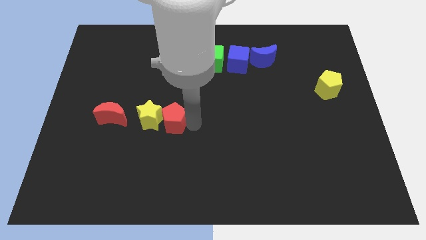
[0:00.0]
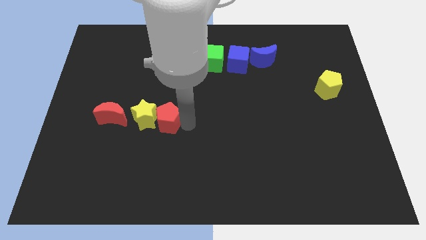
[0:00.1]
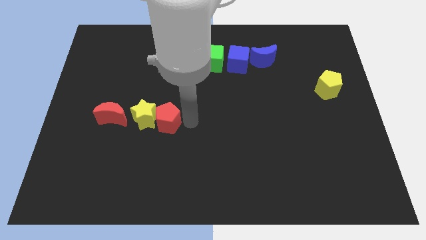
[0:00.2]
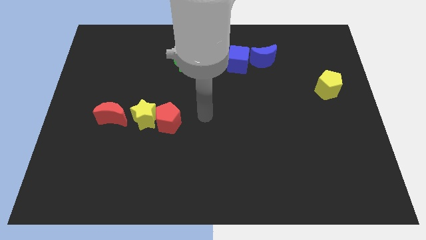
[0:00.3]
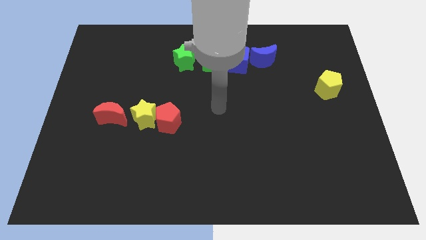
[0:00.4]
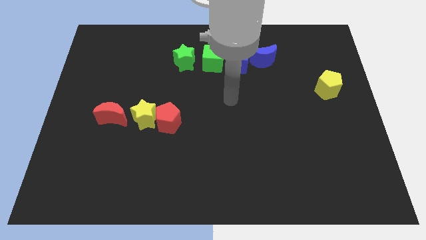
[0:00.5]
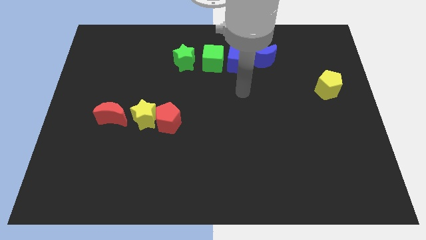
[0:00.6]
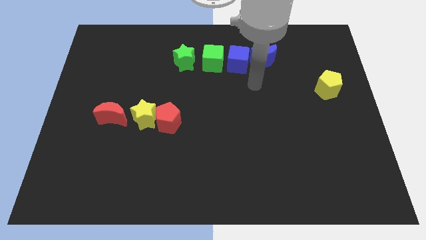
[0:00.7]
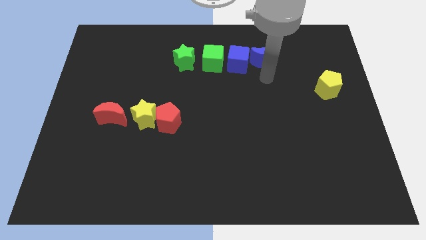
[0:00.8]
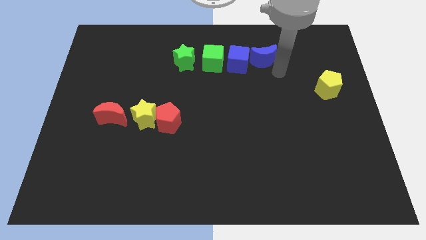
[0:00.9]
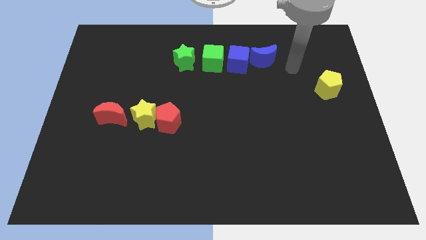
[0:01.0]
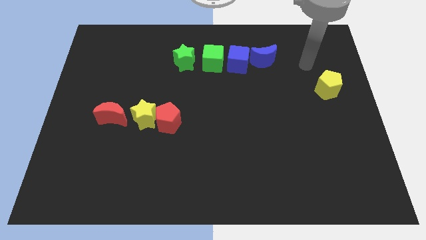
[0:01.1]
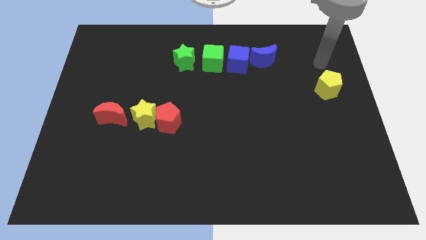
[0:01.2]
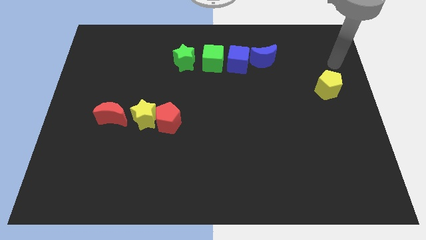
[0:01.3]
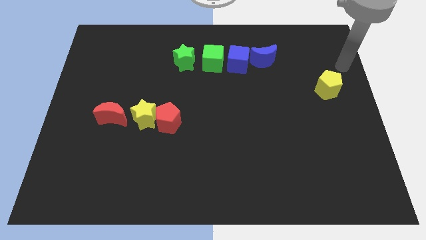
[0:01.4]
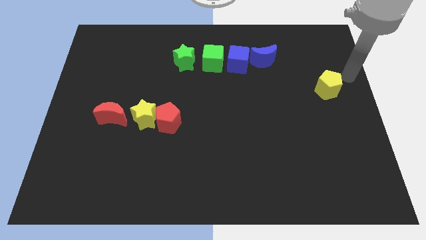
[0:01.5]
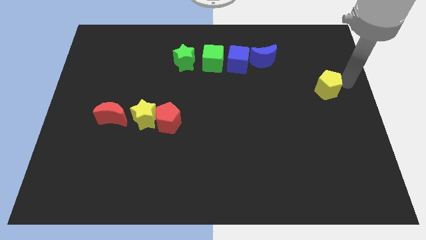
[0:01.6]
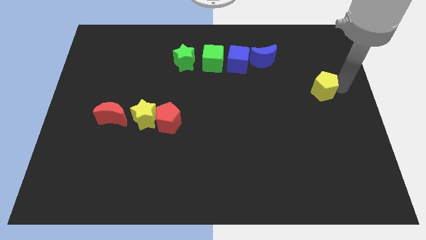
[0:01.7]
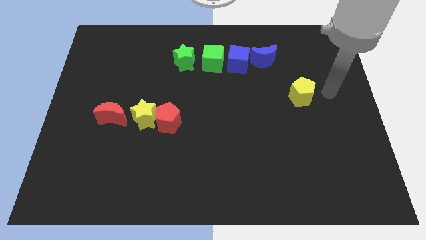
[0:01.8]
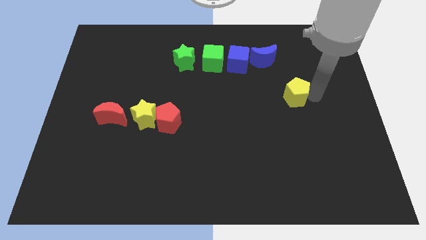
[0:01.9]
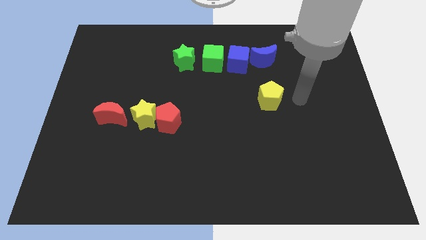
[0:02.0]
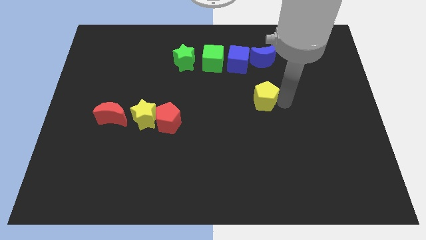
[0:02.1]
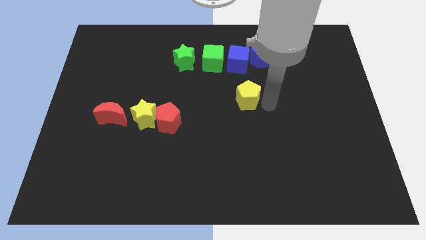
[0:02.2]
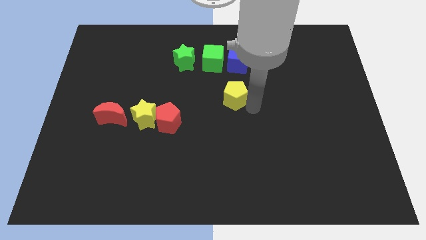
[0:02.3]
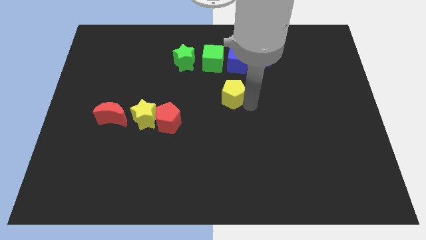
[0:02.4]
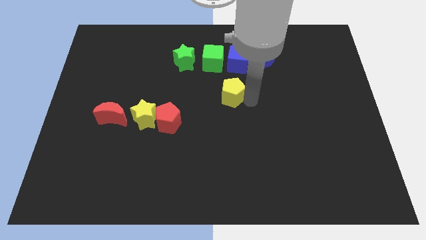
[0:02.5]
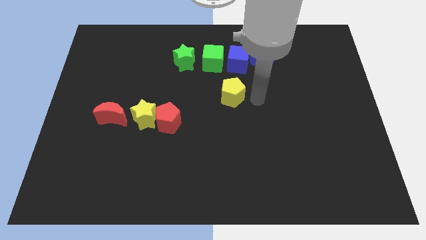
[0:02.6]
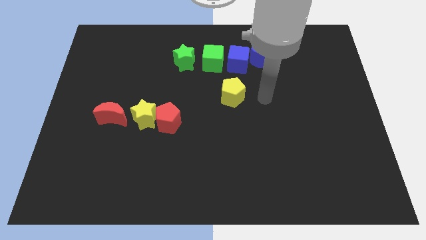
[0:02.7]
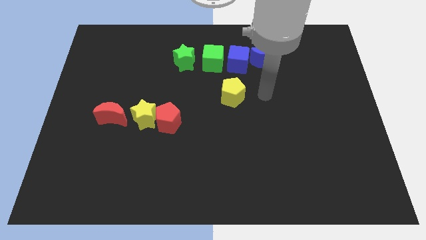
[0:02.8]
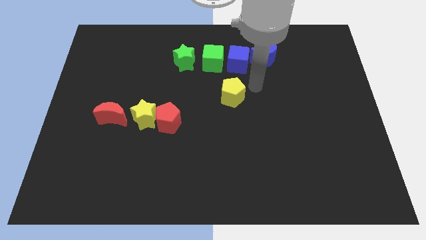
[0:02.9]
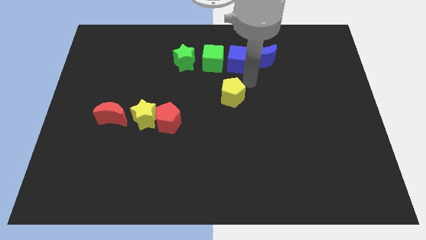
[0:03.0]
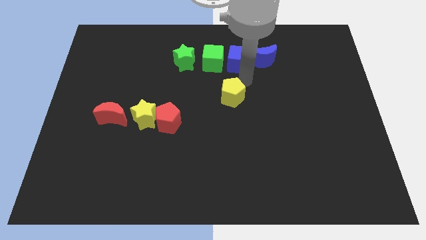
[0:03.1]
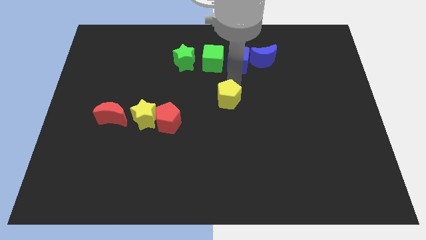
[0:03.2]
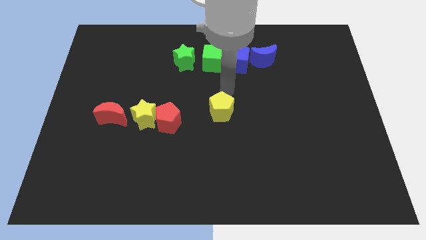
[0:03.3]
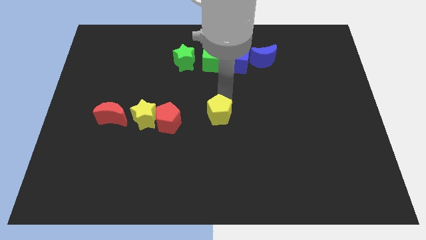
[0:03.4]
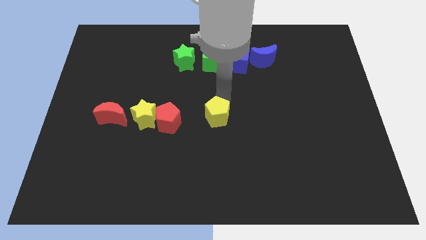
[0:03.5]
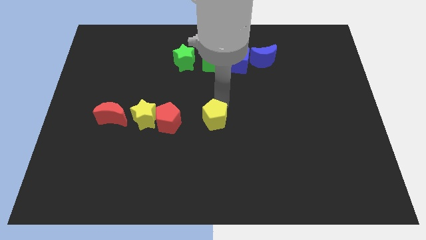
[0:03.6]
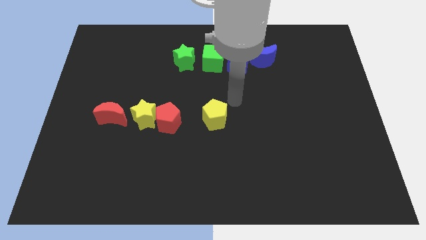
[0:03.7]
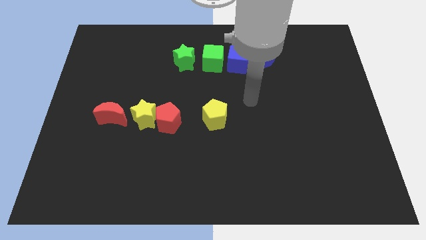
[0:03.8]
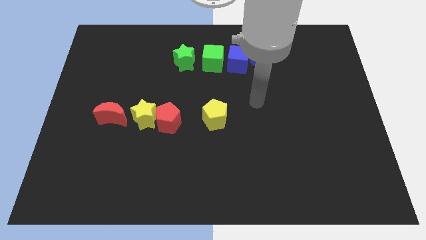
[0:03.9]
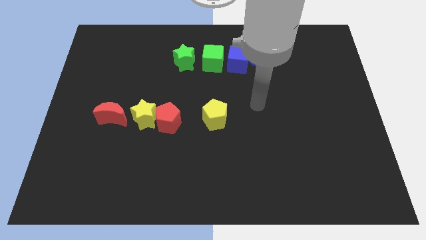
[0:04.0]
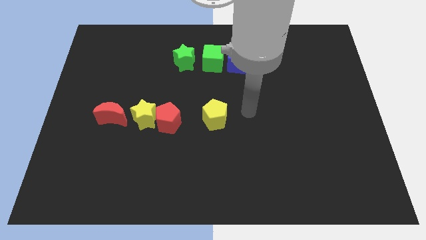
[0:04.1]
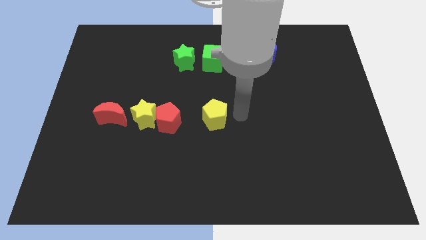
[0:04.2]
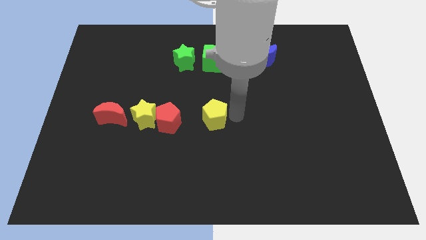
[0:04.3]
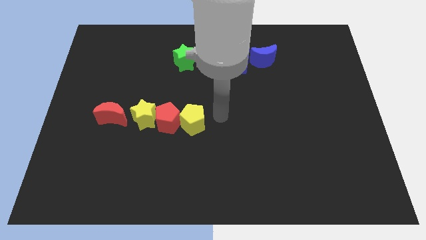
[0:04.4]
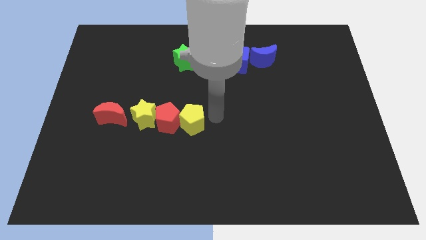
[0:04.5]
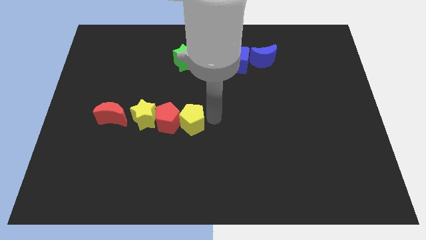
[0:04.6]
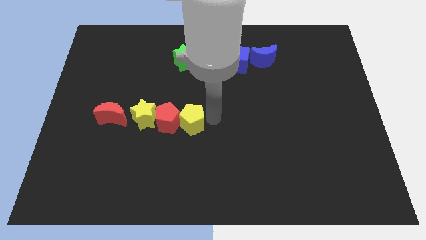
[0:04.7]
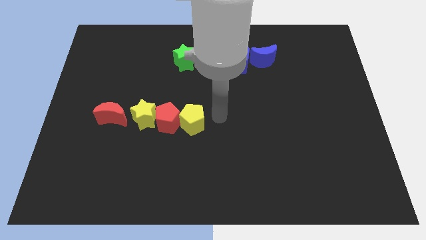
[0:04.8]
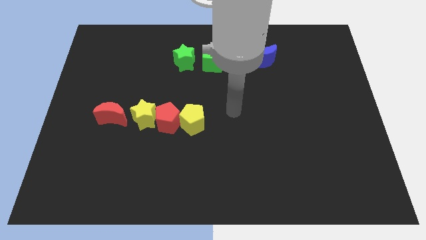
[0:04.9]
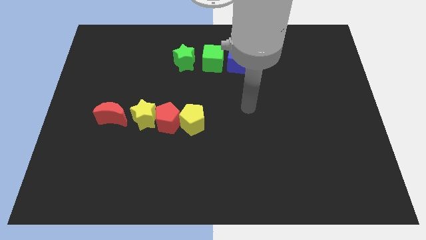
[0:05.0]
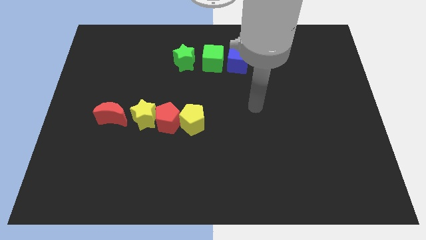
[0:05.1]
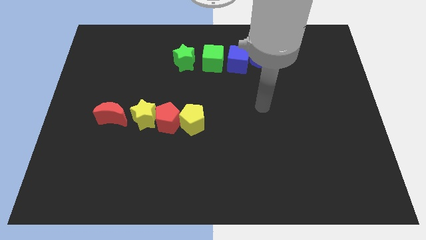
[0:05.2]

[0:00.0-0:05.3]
move yellow pentagon to the right of red pentagon

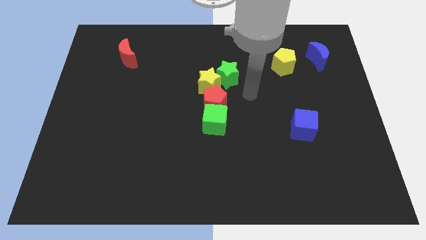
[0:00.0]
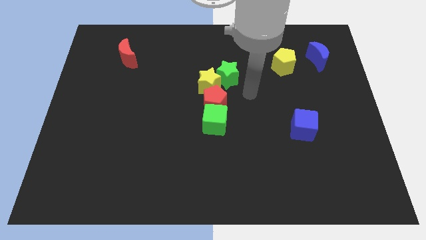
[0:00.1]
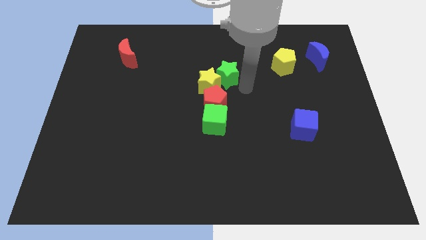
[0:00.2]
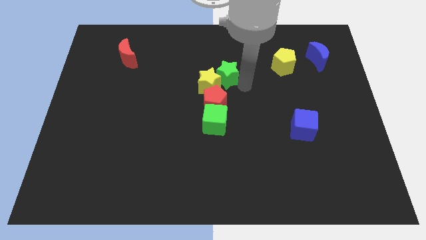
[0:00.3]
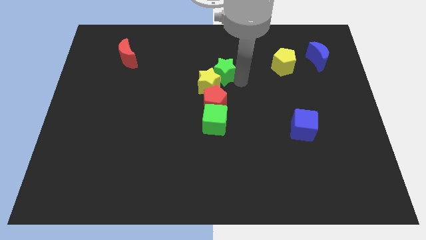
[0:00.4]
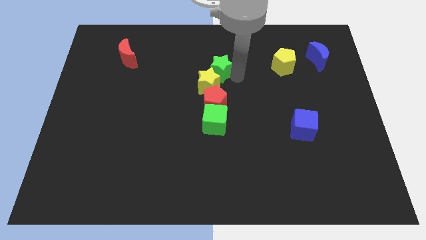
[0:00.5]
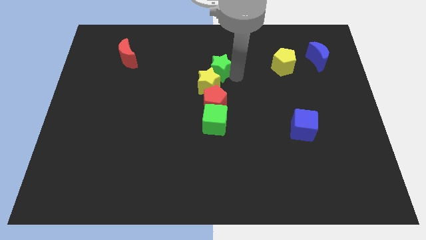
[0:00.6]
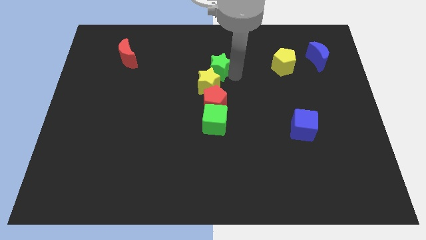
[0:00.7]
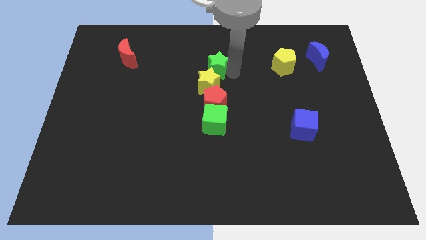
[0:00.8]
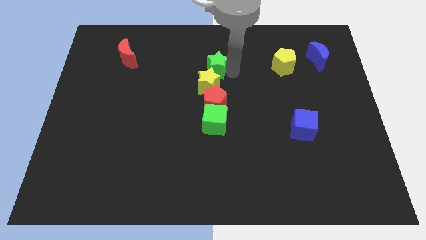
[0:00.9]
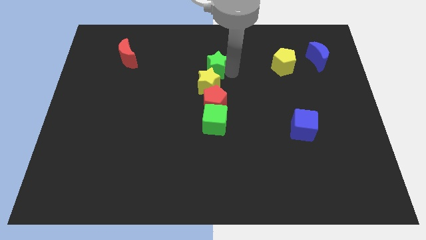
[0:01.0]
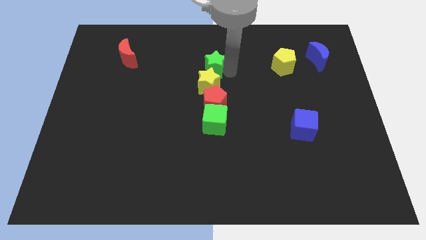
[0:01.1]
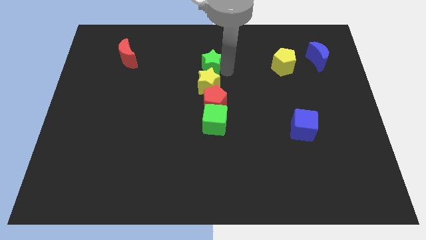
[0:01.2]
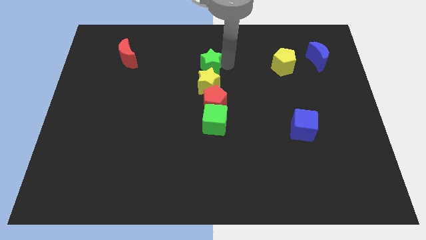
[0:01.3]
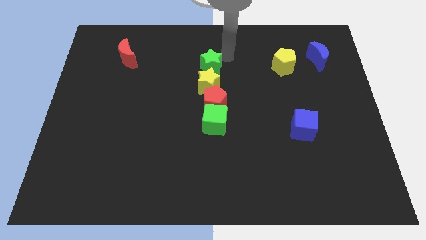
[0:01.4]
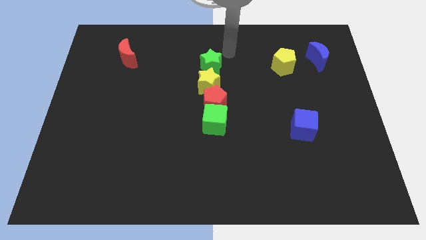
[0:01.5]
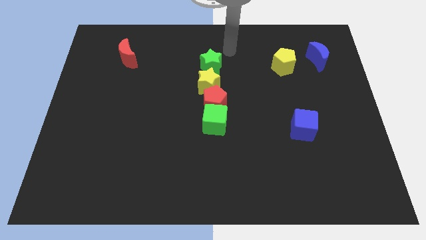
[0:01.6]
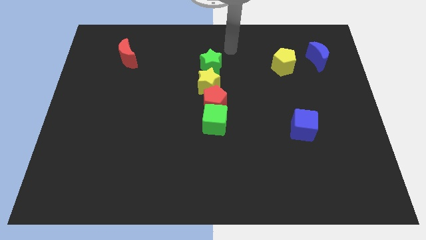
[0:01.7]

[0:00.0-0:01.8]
place green star to the top of yellow star

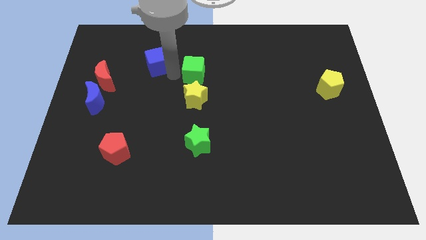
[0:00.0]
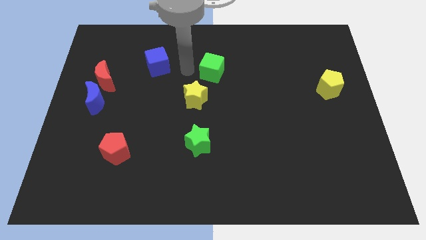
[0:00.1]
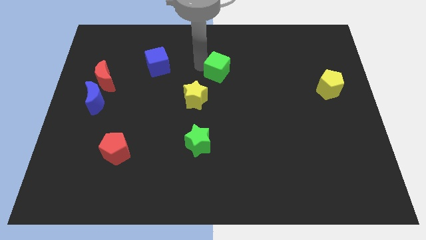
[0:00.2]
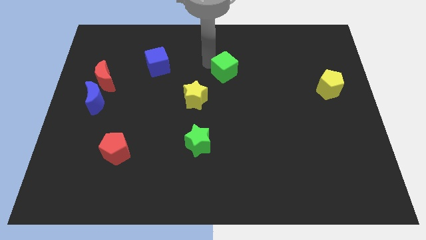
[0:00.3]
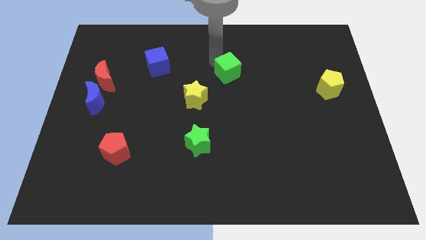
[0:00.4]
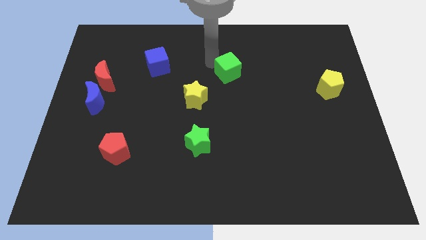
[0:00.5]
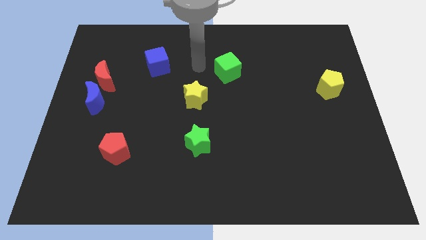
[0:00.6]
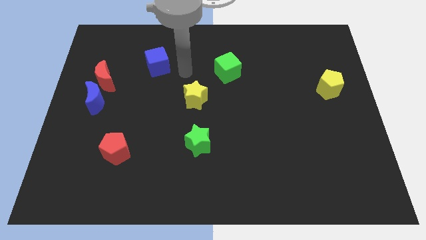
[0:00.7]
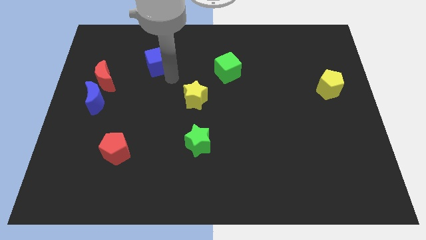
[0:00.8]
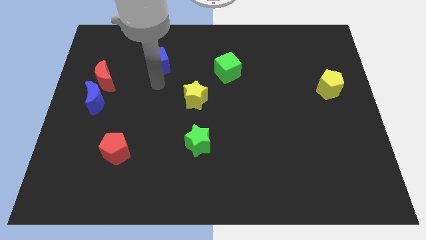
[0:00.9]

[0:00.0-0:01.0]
move the green cube diagonally right of the yellow star

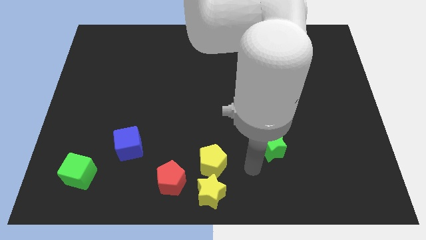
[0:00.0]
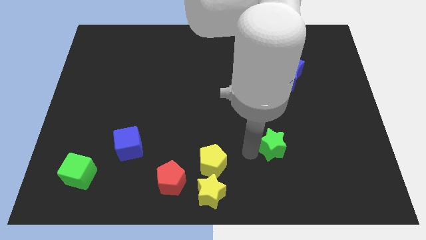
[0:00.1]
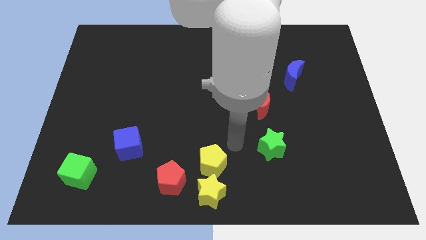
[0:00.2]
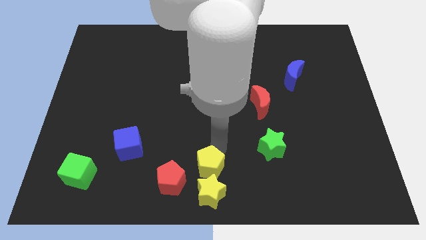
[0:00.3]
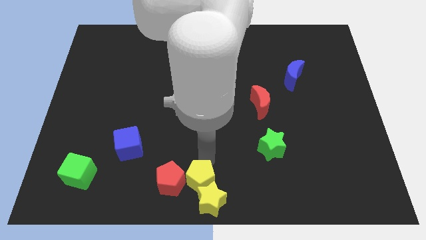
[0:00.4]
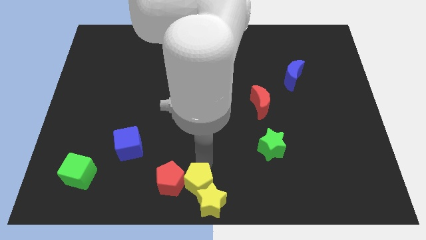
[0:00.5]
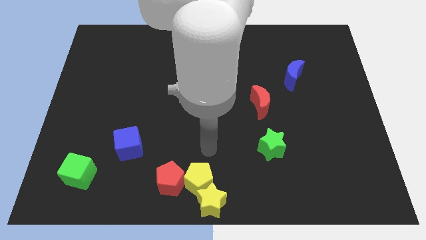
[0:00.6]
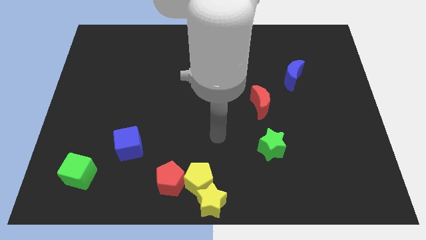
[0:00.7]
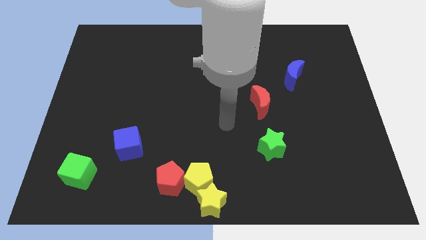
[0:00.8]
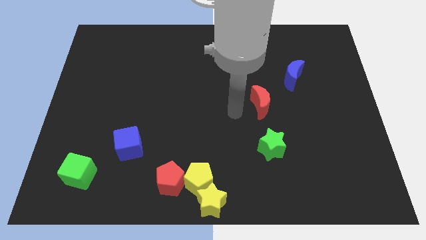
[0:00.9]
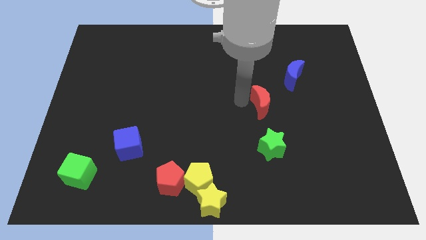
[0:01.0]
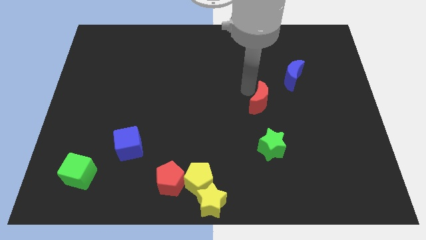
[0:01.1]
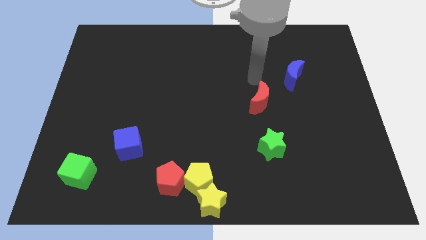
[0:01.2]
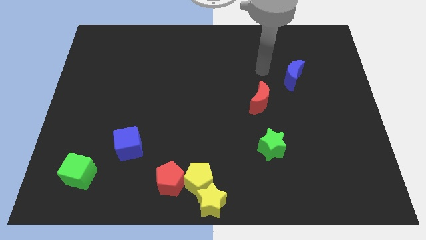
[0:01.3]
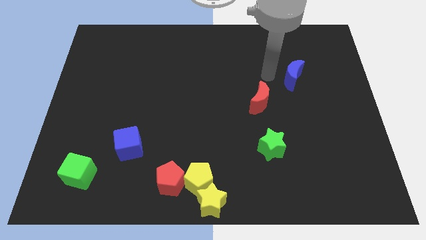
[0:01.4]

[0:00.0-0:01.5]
slightly push the yellow pentagon into the yellow star
